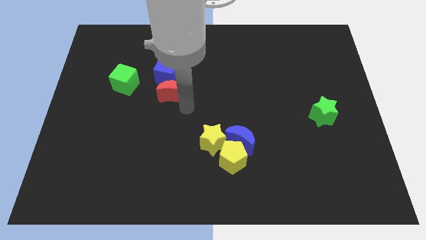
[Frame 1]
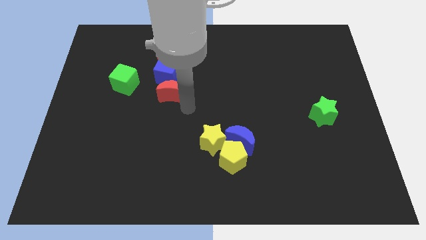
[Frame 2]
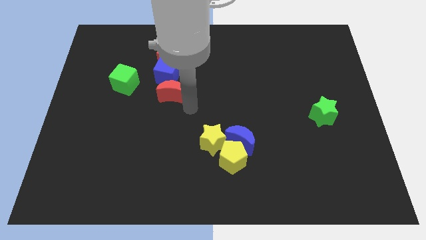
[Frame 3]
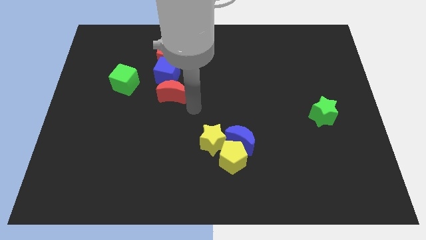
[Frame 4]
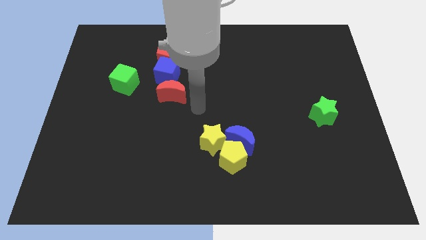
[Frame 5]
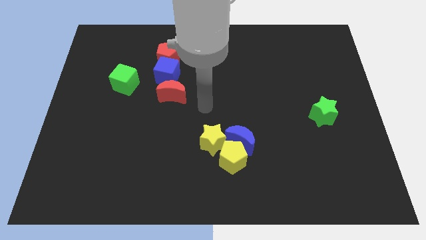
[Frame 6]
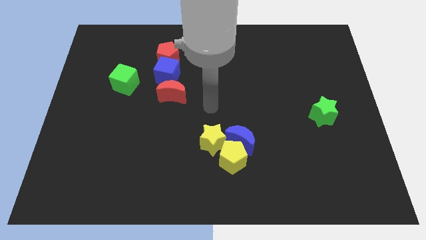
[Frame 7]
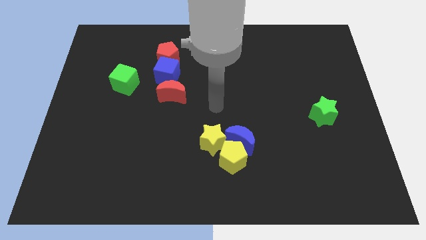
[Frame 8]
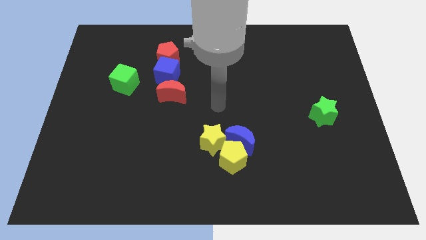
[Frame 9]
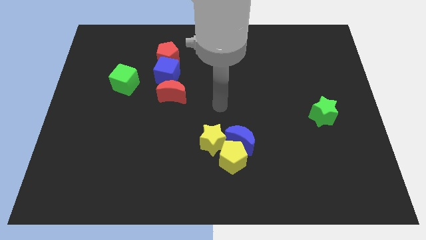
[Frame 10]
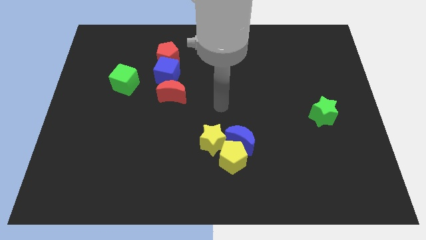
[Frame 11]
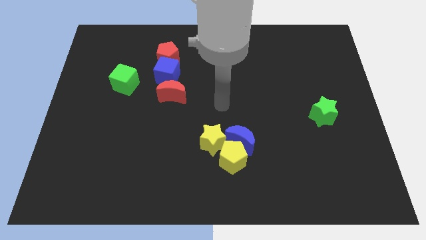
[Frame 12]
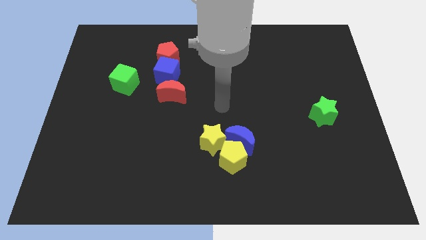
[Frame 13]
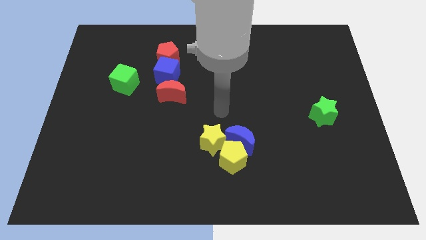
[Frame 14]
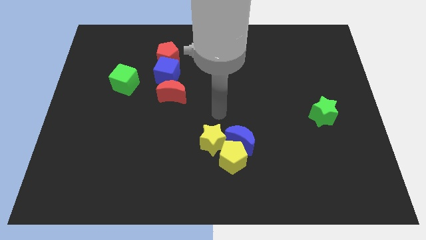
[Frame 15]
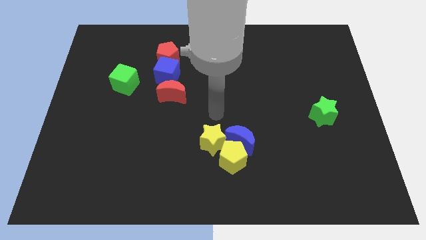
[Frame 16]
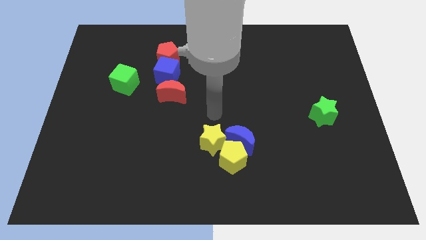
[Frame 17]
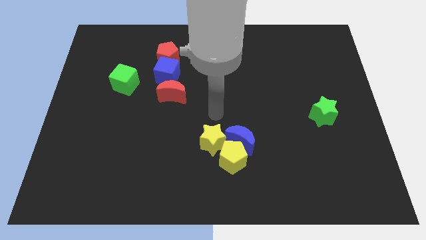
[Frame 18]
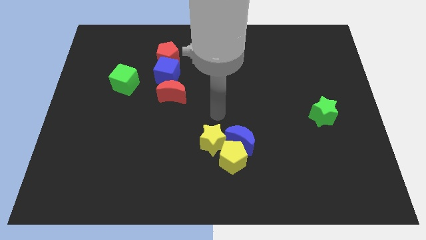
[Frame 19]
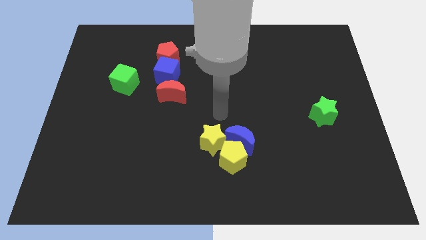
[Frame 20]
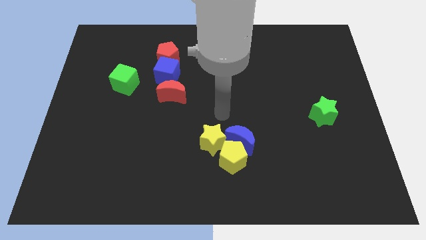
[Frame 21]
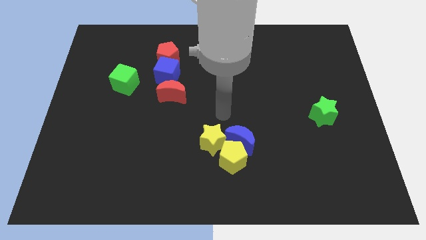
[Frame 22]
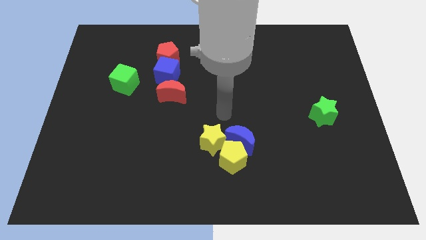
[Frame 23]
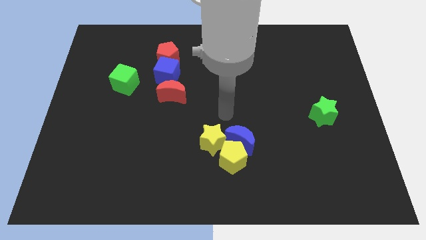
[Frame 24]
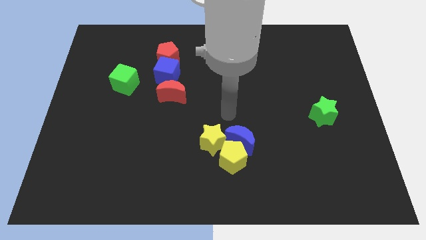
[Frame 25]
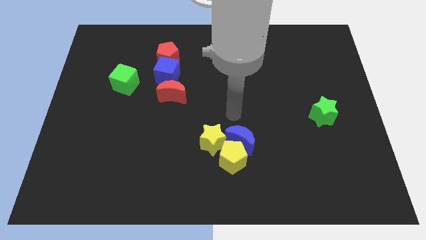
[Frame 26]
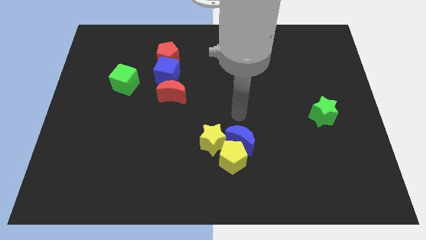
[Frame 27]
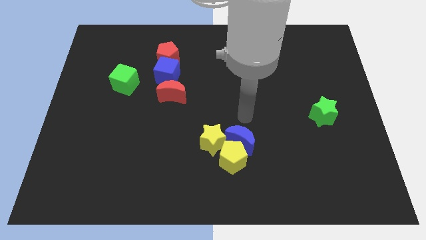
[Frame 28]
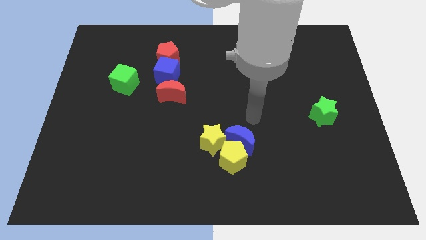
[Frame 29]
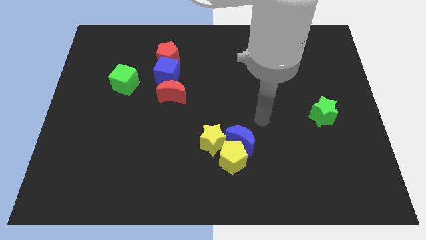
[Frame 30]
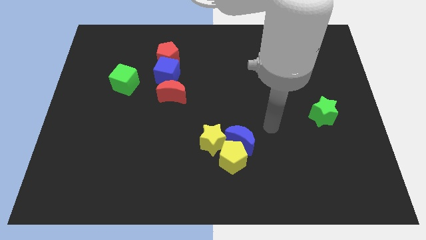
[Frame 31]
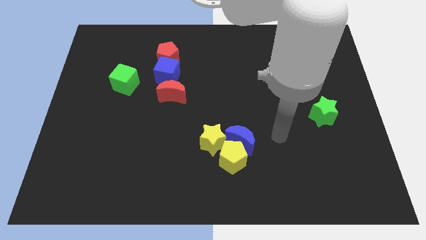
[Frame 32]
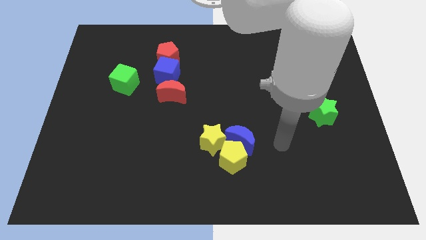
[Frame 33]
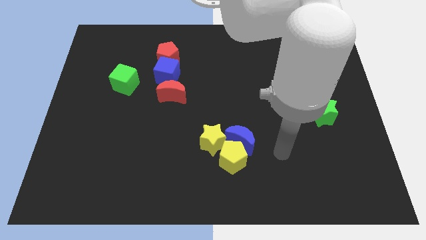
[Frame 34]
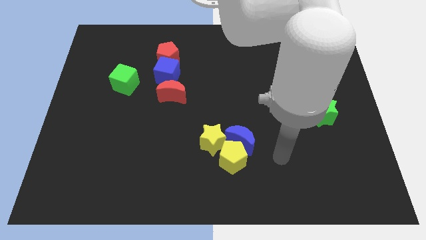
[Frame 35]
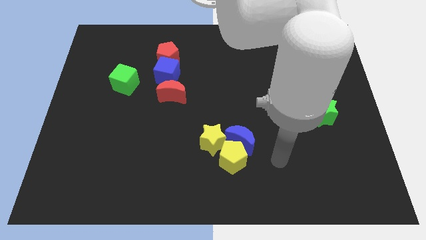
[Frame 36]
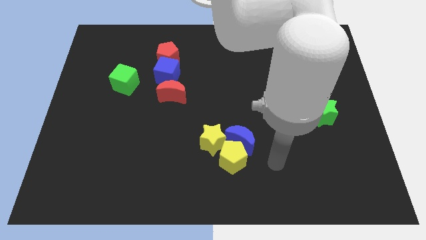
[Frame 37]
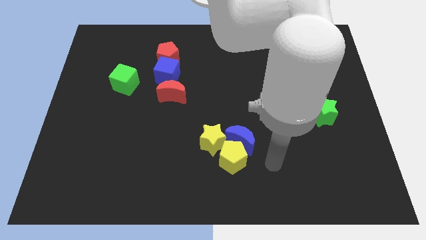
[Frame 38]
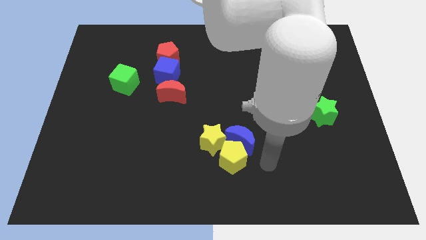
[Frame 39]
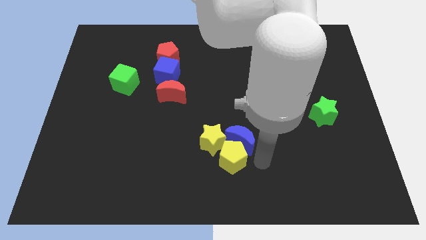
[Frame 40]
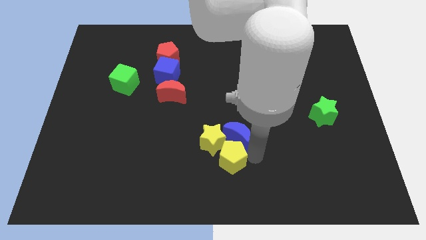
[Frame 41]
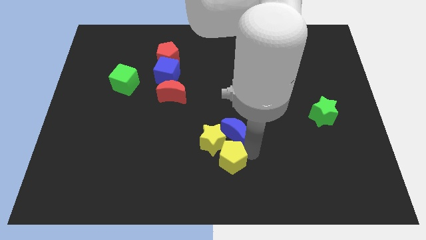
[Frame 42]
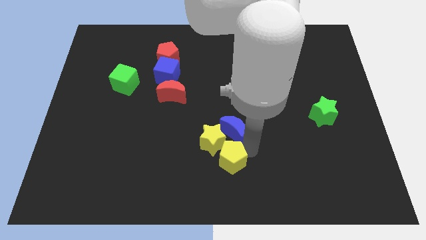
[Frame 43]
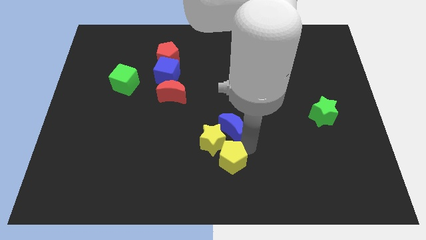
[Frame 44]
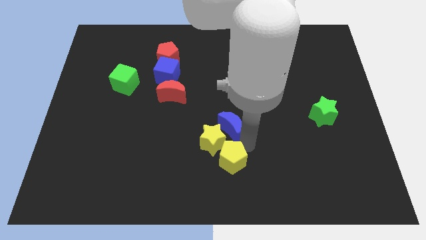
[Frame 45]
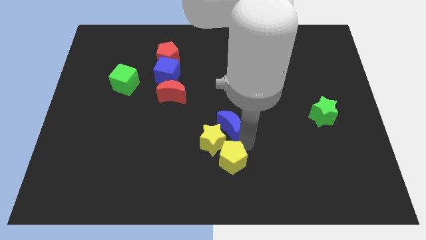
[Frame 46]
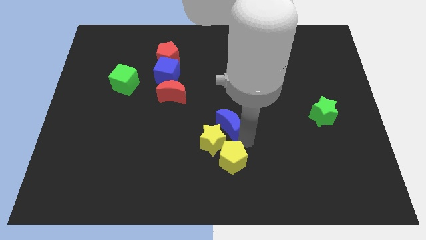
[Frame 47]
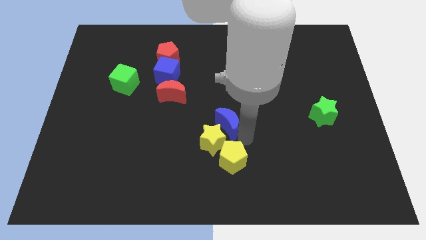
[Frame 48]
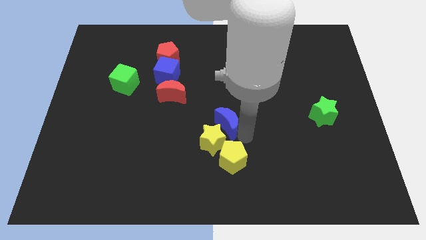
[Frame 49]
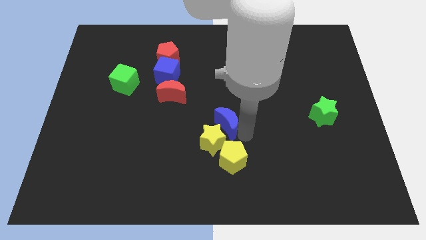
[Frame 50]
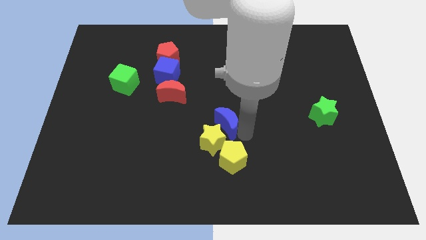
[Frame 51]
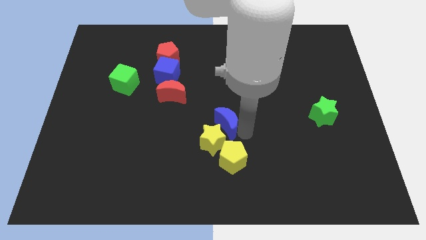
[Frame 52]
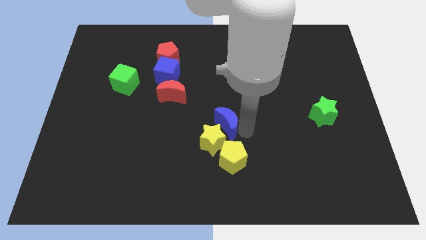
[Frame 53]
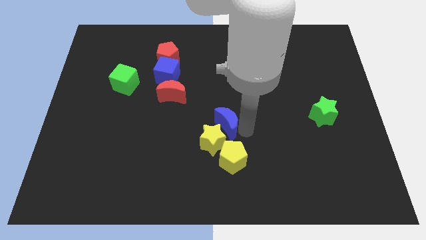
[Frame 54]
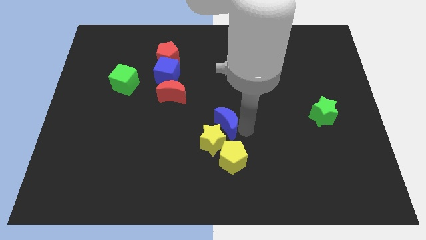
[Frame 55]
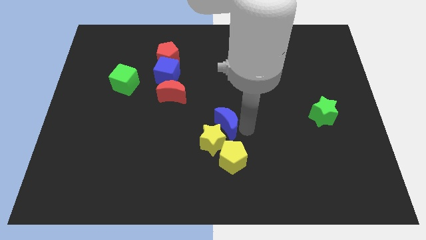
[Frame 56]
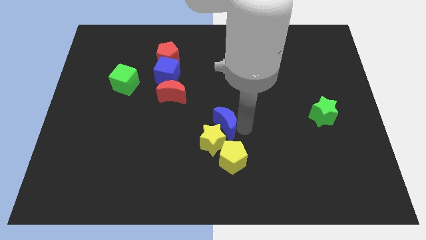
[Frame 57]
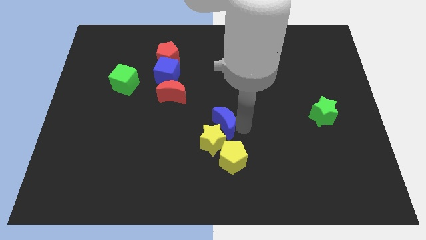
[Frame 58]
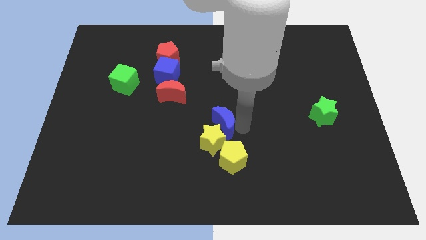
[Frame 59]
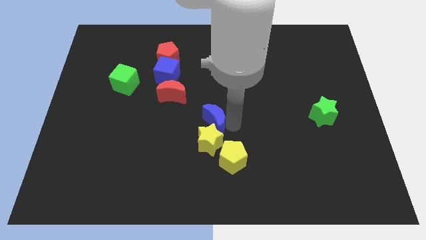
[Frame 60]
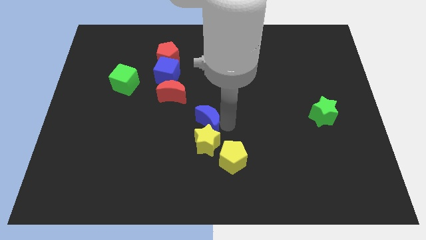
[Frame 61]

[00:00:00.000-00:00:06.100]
slide the blue creescent to the top side of the yellow star

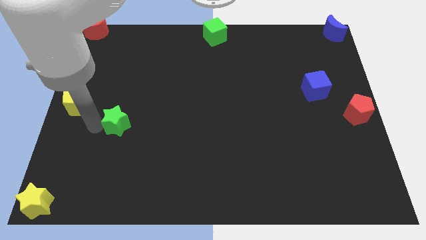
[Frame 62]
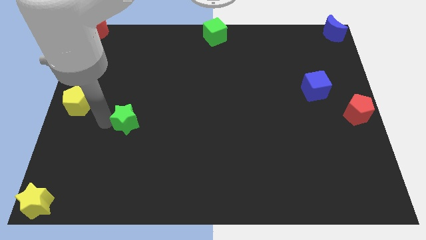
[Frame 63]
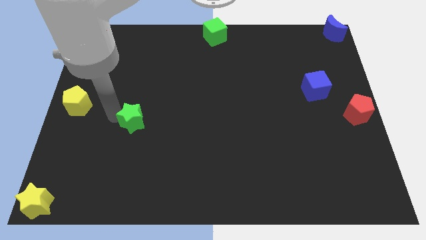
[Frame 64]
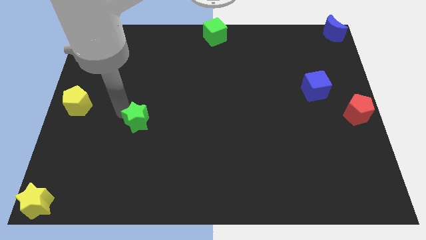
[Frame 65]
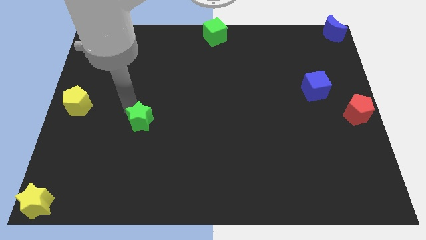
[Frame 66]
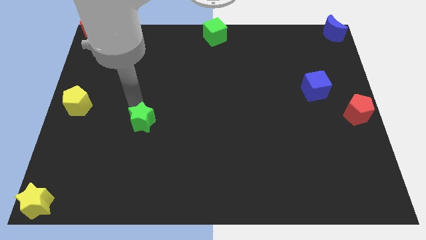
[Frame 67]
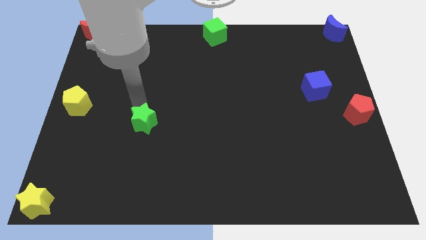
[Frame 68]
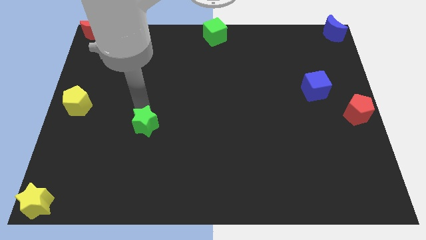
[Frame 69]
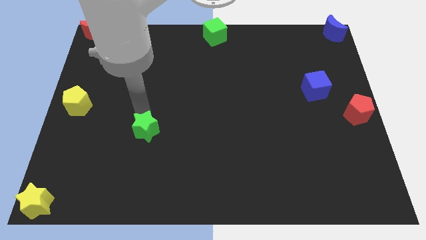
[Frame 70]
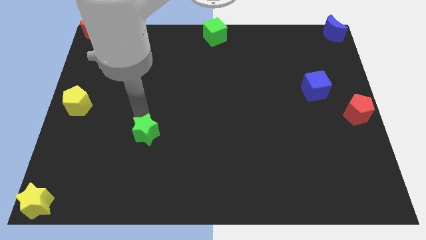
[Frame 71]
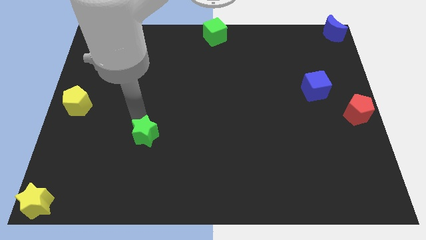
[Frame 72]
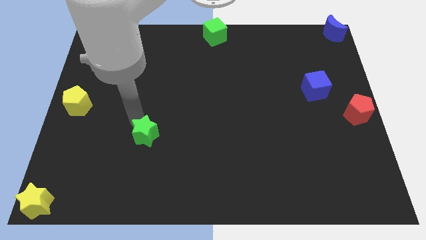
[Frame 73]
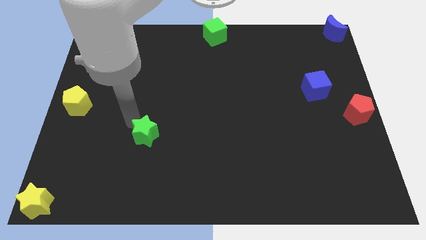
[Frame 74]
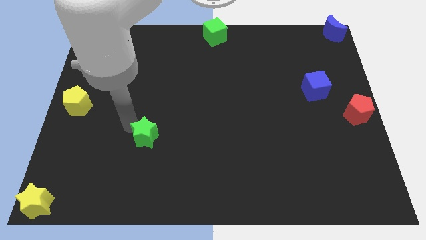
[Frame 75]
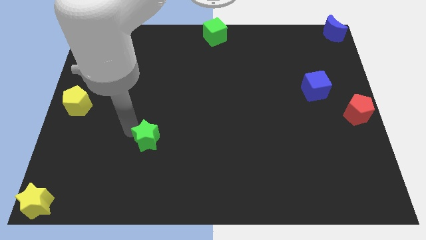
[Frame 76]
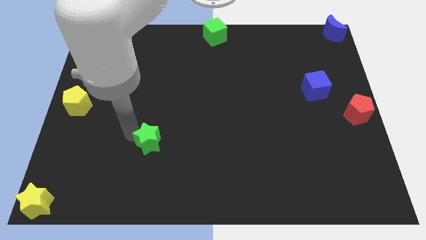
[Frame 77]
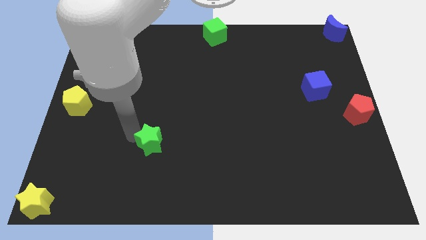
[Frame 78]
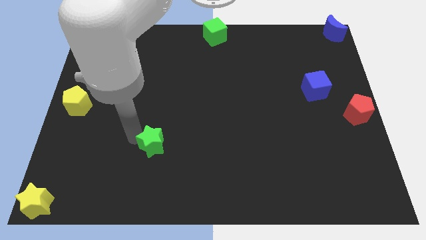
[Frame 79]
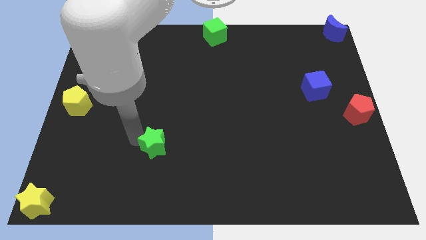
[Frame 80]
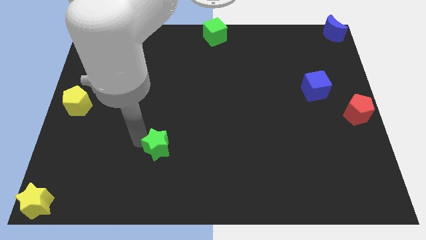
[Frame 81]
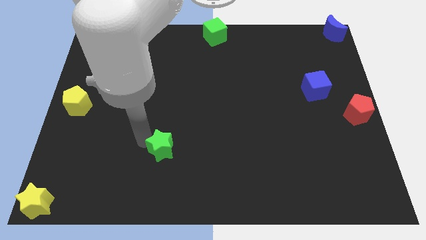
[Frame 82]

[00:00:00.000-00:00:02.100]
push the green star towards the bottom side of the board

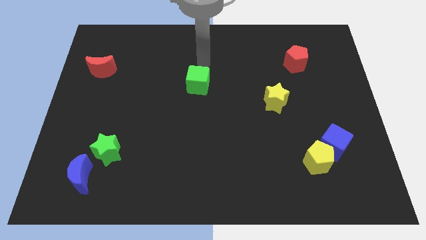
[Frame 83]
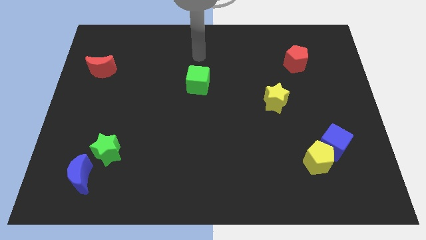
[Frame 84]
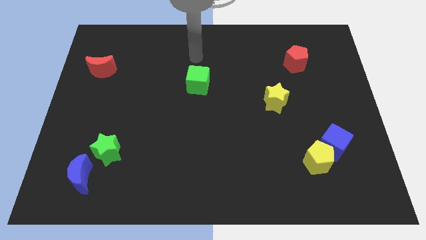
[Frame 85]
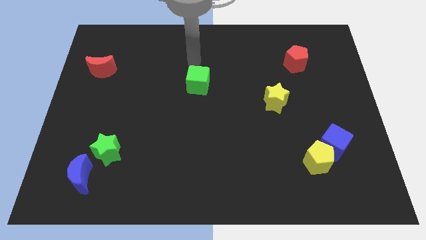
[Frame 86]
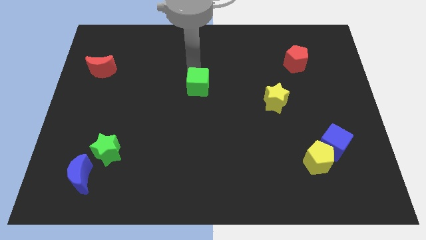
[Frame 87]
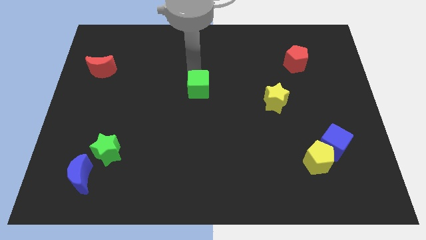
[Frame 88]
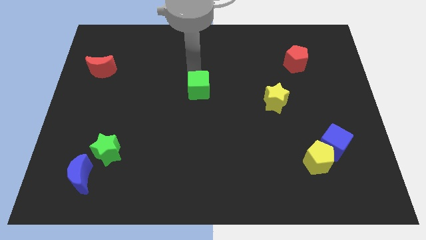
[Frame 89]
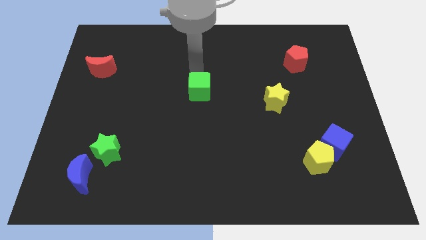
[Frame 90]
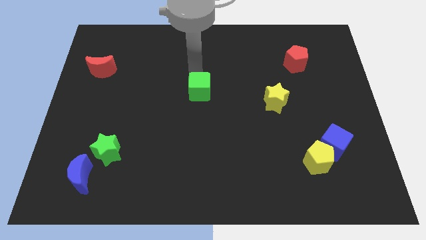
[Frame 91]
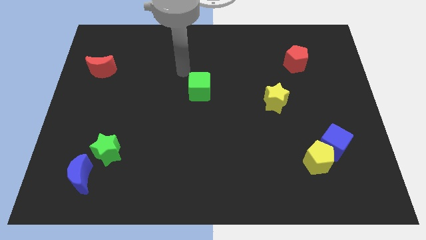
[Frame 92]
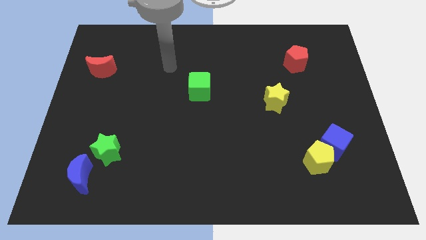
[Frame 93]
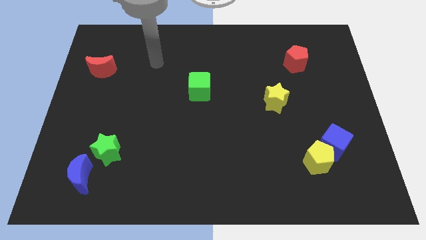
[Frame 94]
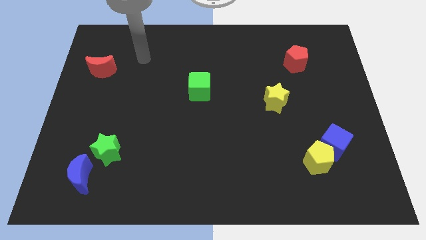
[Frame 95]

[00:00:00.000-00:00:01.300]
slightly move the green cube downwards
